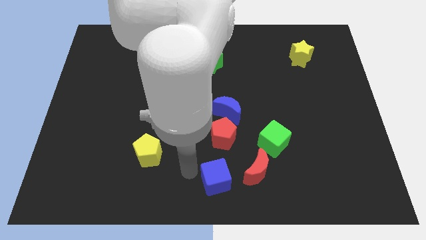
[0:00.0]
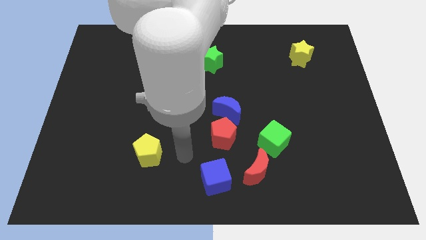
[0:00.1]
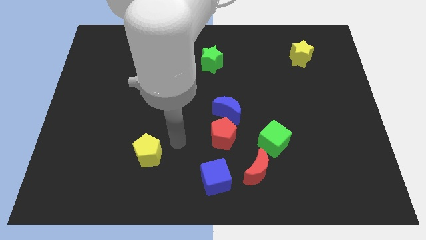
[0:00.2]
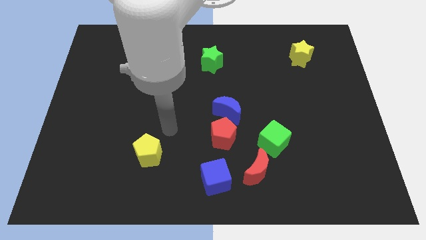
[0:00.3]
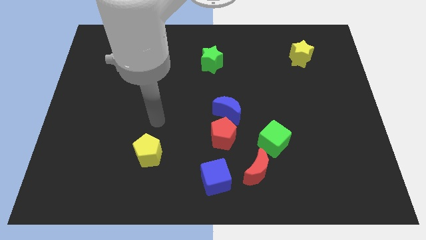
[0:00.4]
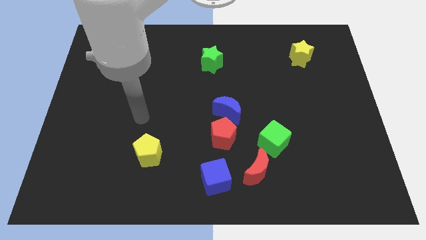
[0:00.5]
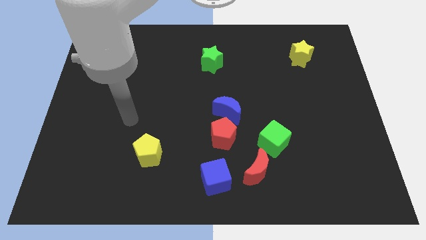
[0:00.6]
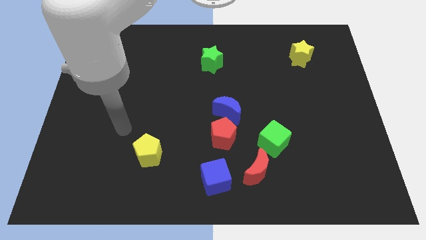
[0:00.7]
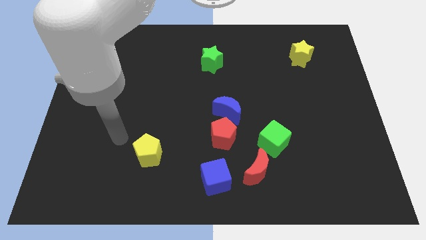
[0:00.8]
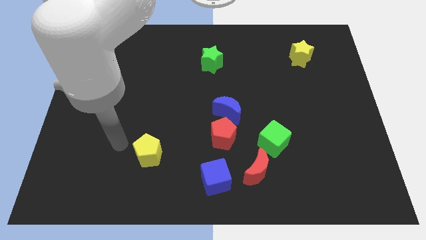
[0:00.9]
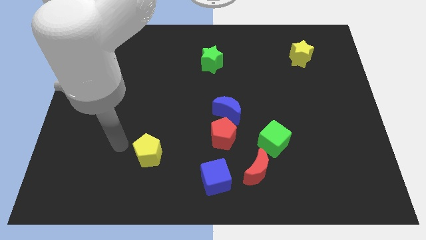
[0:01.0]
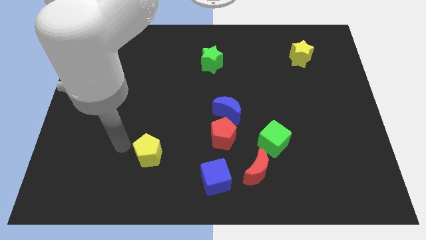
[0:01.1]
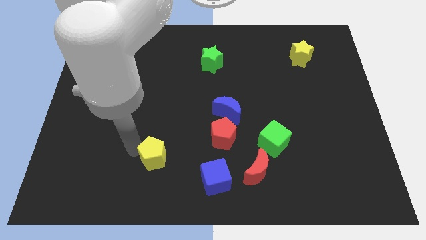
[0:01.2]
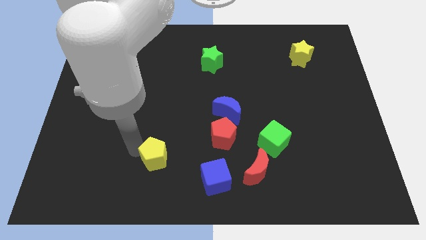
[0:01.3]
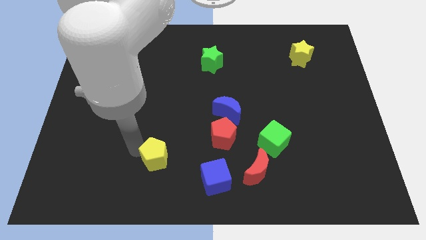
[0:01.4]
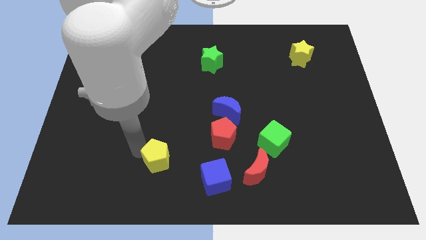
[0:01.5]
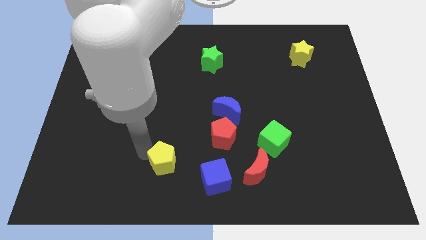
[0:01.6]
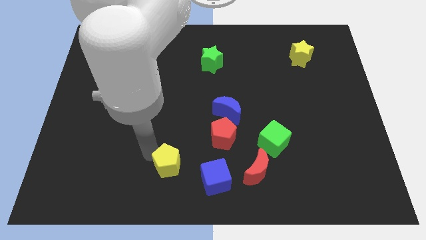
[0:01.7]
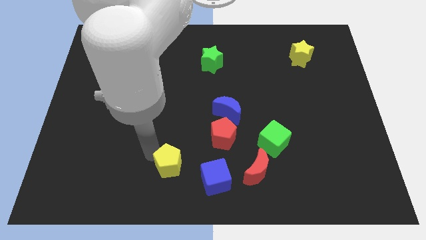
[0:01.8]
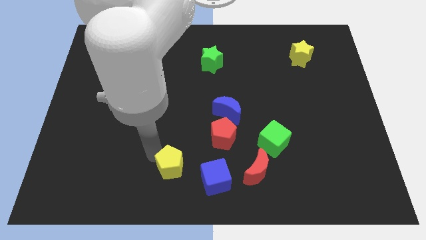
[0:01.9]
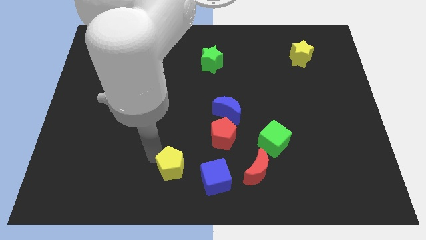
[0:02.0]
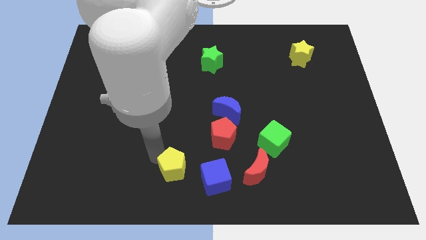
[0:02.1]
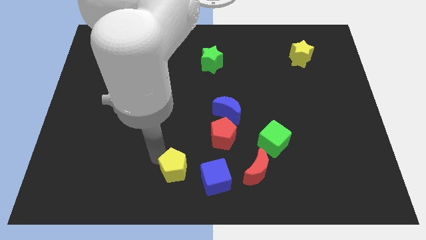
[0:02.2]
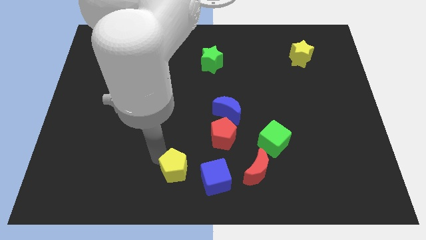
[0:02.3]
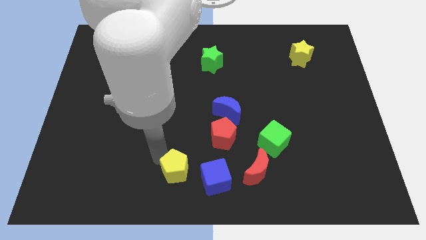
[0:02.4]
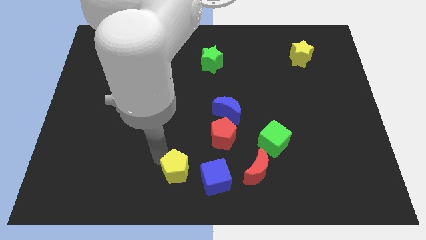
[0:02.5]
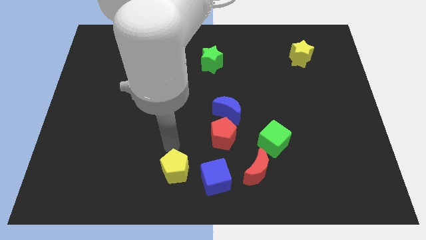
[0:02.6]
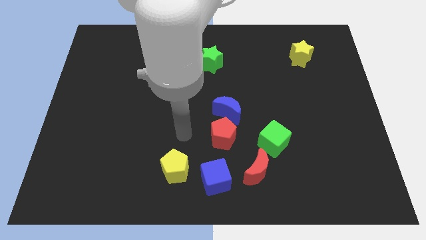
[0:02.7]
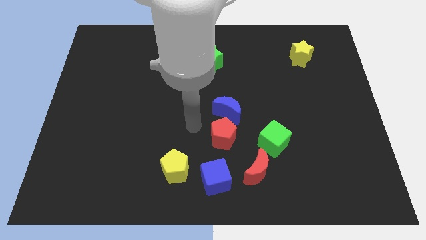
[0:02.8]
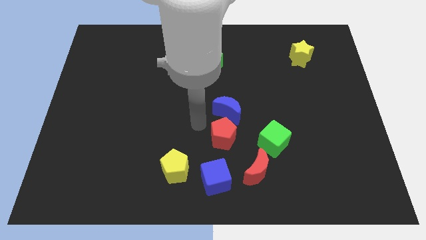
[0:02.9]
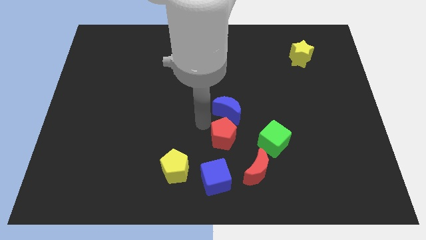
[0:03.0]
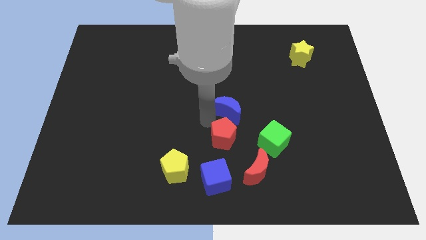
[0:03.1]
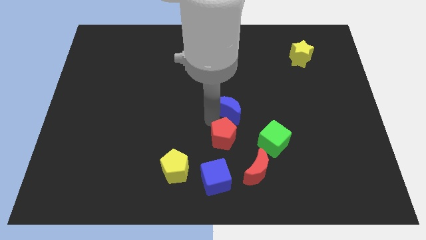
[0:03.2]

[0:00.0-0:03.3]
push the yellow pentagon slightly towards the blue cube

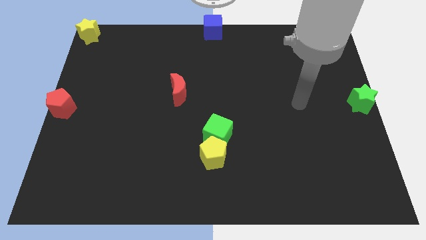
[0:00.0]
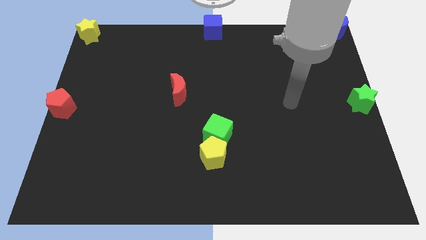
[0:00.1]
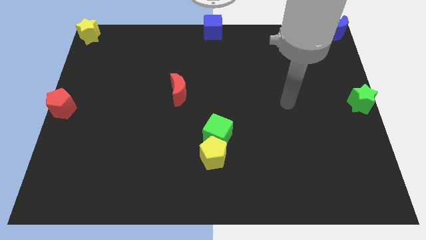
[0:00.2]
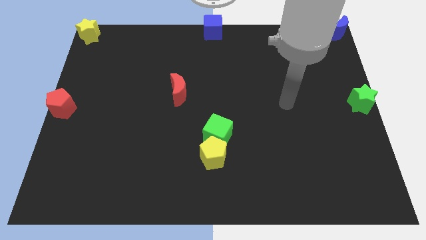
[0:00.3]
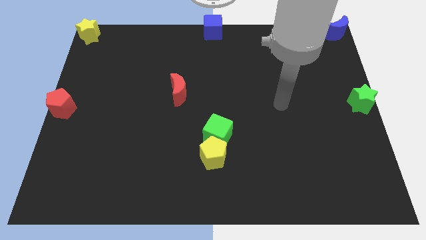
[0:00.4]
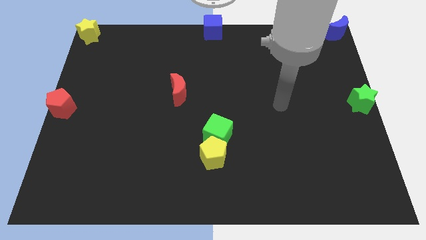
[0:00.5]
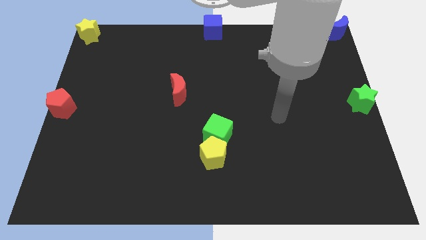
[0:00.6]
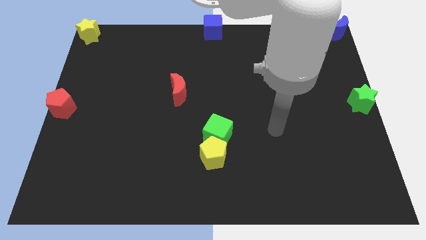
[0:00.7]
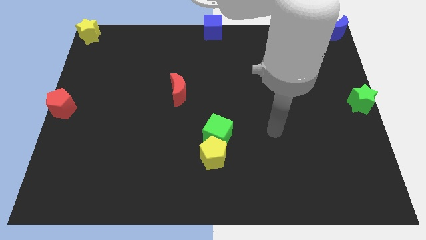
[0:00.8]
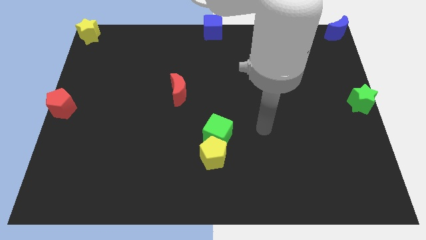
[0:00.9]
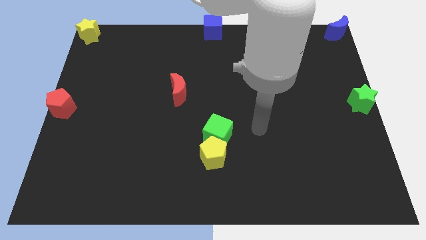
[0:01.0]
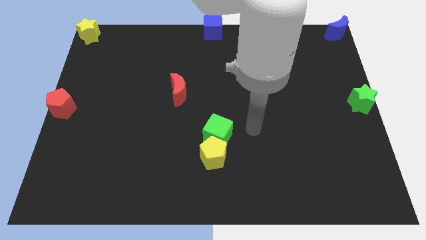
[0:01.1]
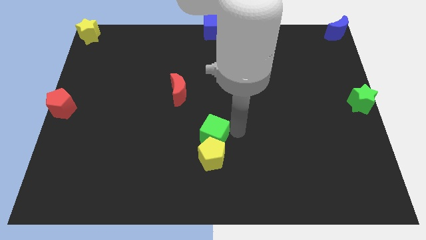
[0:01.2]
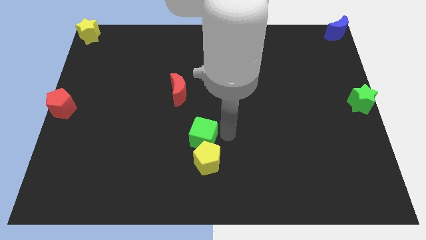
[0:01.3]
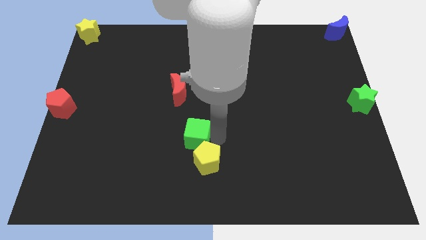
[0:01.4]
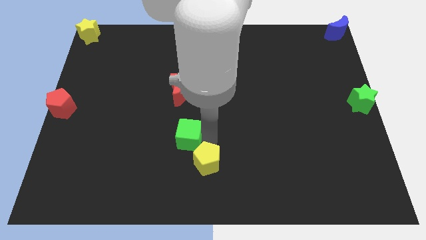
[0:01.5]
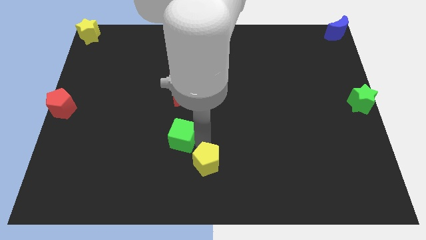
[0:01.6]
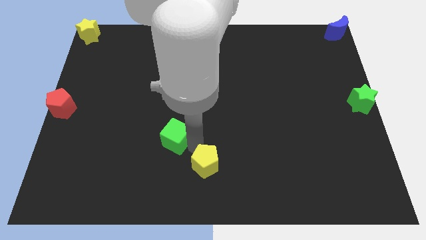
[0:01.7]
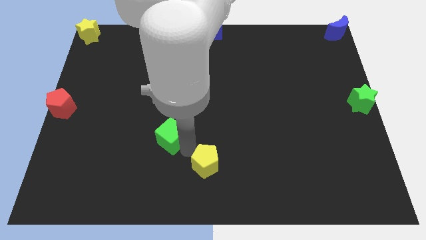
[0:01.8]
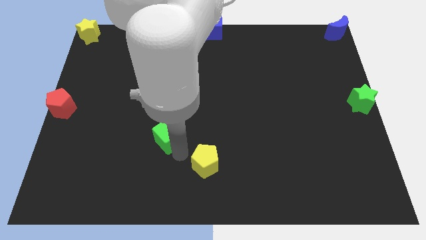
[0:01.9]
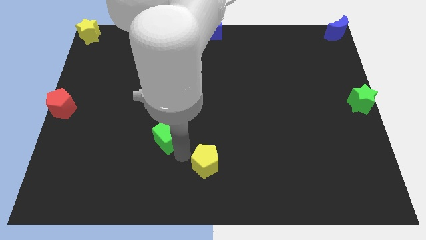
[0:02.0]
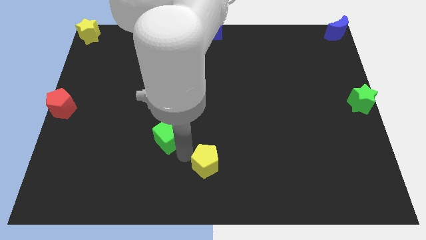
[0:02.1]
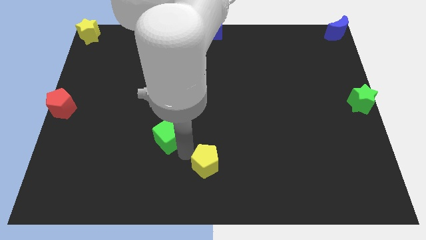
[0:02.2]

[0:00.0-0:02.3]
separate the green cube from the yellow pentagon

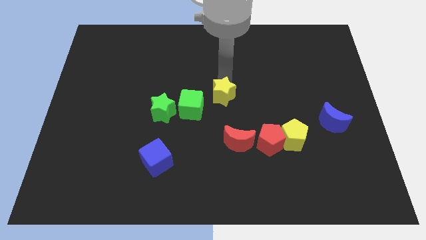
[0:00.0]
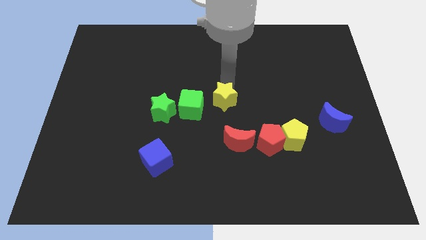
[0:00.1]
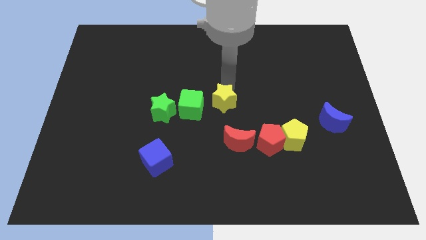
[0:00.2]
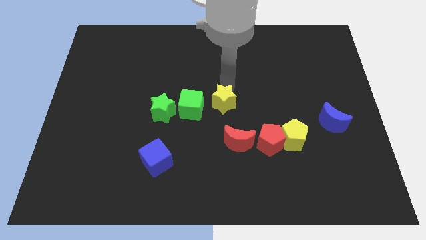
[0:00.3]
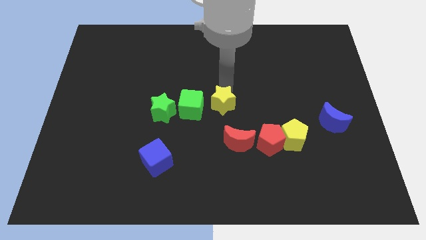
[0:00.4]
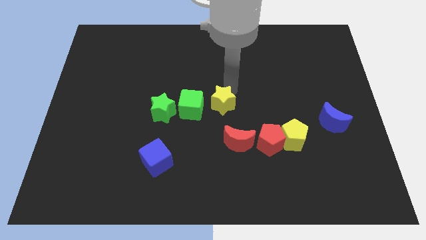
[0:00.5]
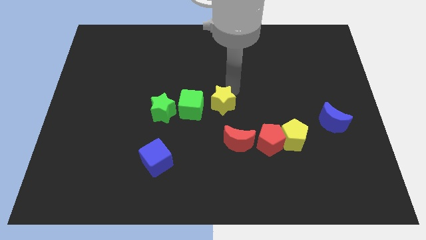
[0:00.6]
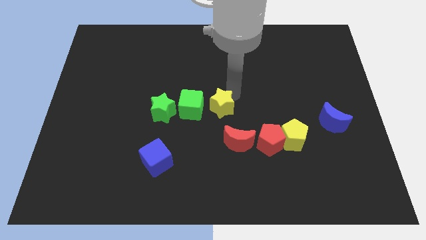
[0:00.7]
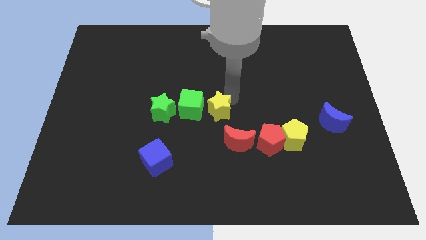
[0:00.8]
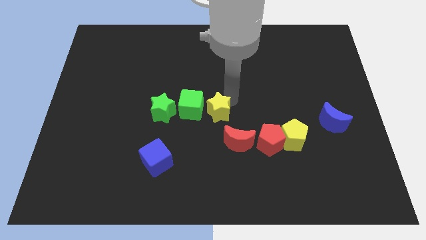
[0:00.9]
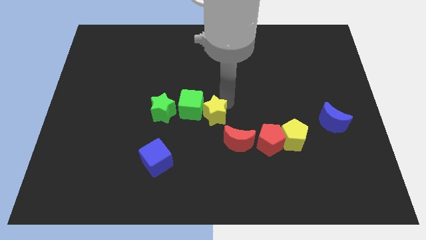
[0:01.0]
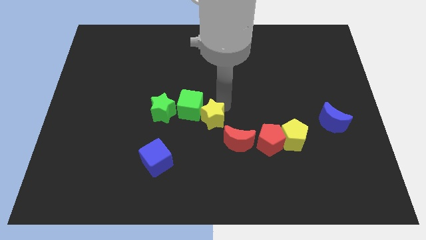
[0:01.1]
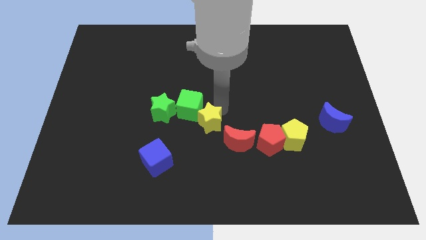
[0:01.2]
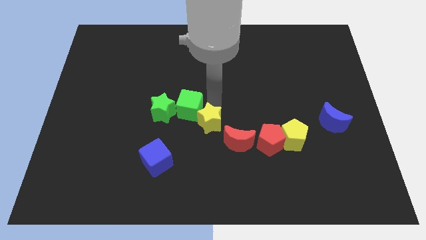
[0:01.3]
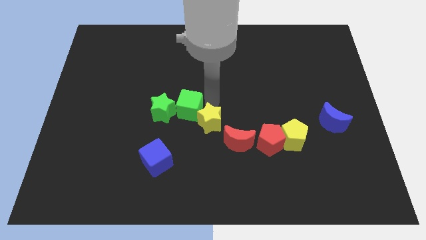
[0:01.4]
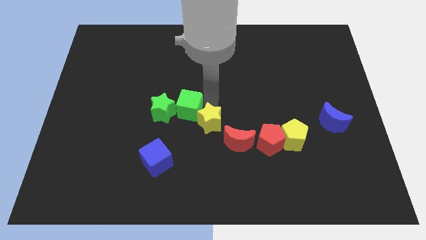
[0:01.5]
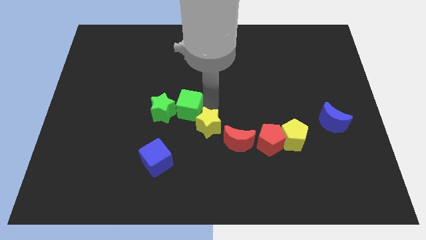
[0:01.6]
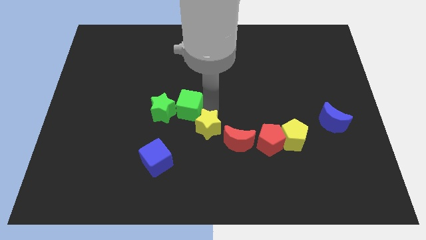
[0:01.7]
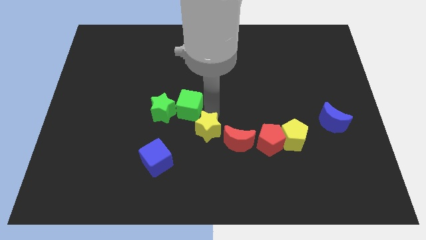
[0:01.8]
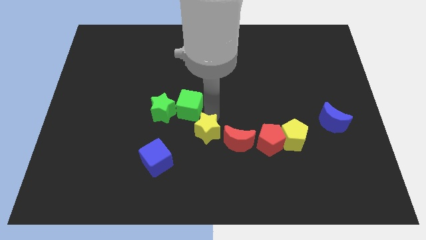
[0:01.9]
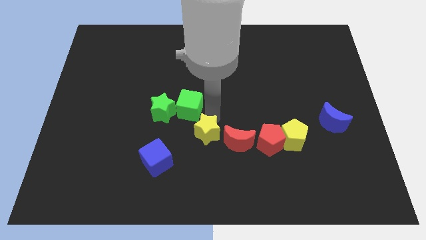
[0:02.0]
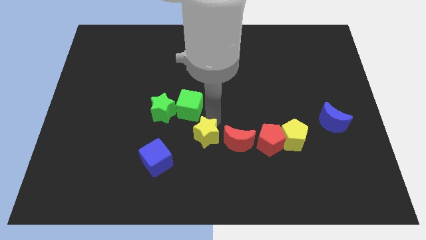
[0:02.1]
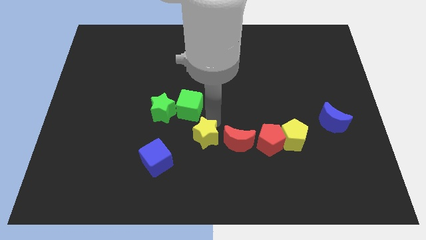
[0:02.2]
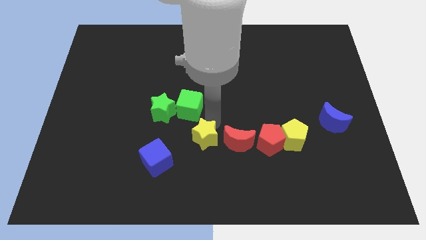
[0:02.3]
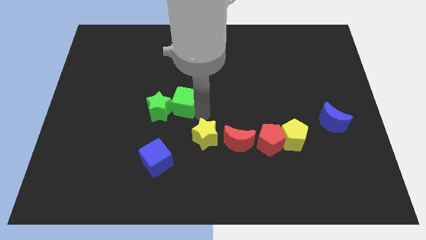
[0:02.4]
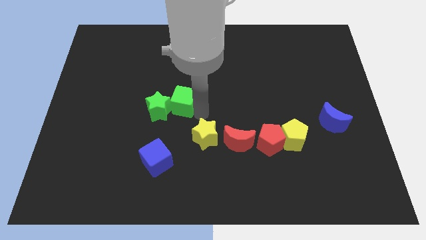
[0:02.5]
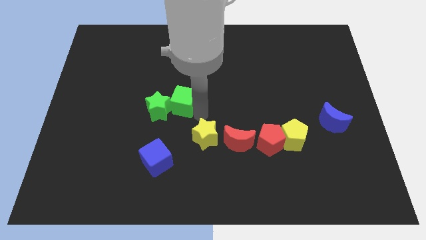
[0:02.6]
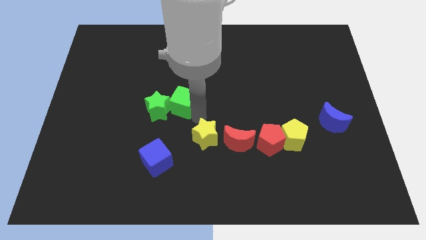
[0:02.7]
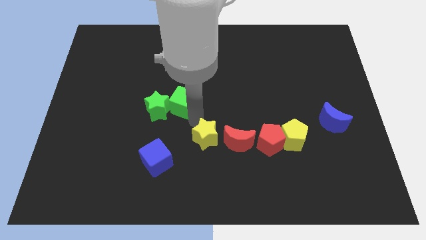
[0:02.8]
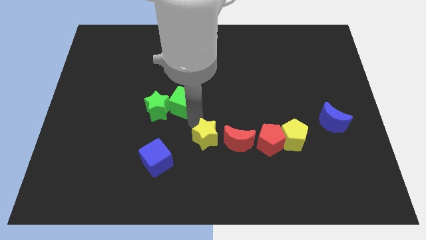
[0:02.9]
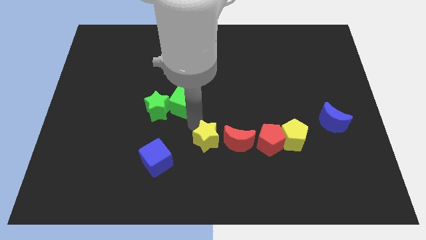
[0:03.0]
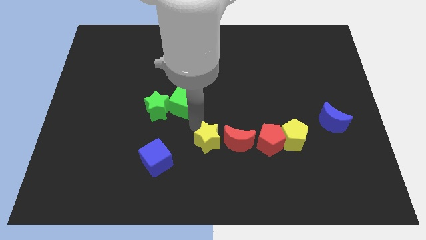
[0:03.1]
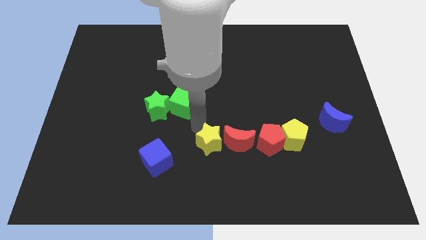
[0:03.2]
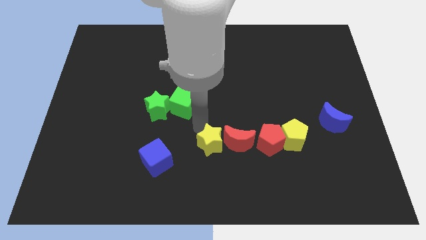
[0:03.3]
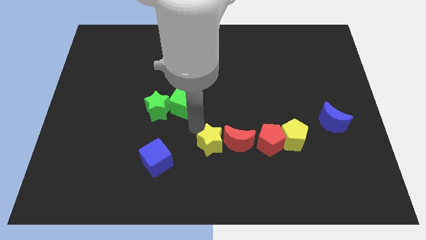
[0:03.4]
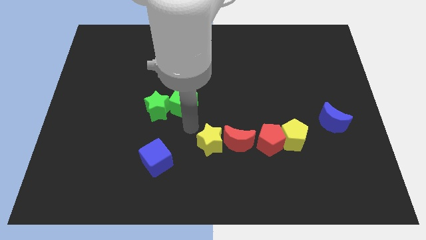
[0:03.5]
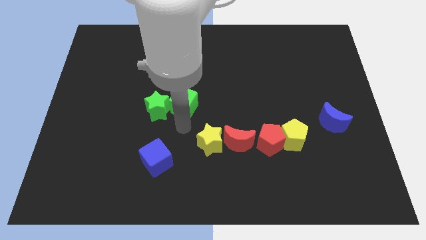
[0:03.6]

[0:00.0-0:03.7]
move the yellow star left to the red crescent
